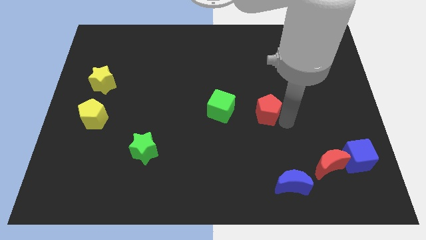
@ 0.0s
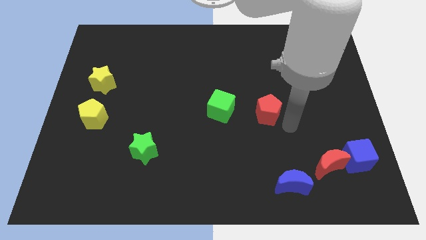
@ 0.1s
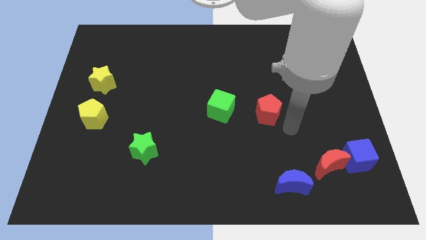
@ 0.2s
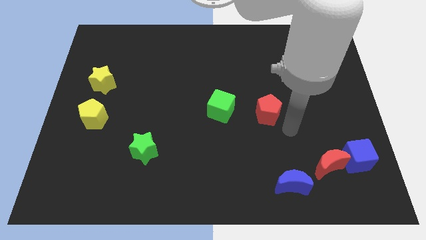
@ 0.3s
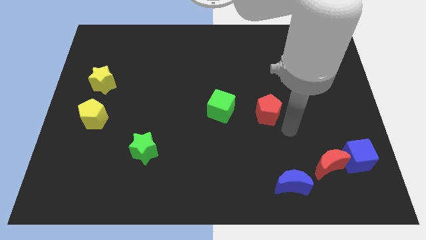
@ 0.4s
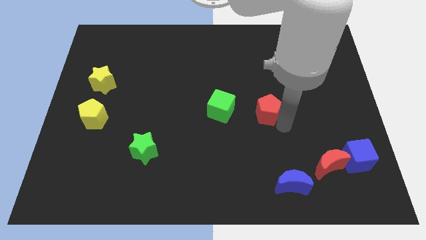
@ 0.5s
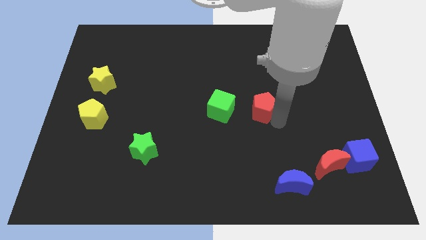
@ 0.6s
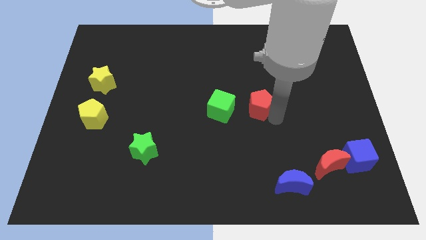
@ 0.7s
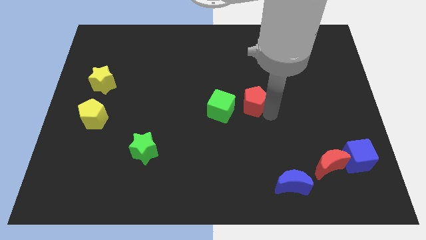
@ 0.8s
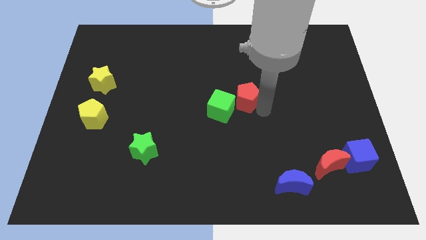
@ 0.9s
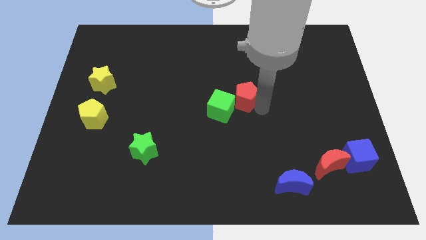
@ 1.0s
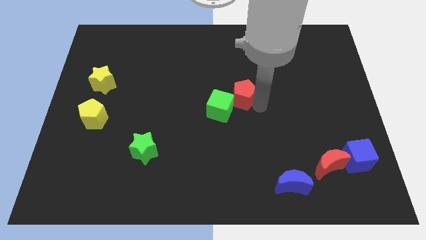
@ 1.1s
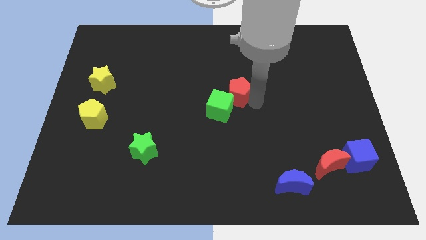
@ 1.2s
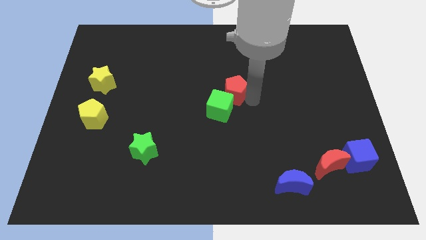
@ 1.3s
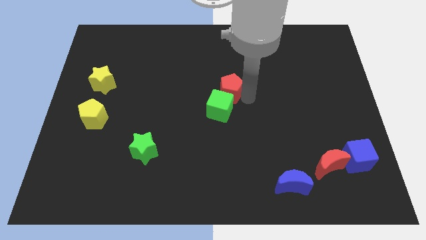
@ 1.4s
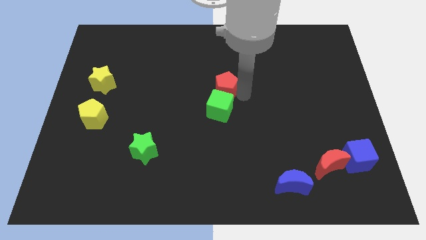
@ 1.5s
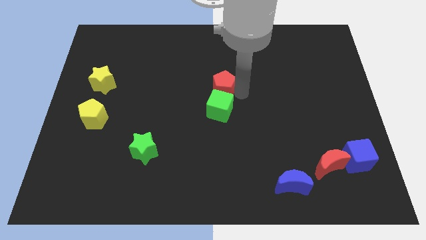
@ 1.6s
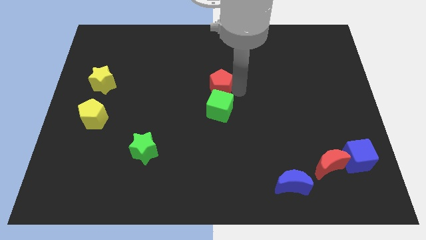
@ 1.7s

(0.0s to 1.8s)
move the red pentagon at the top side of the green cube

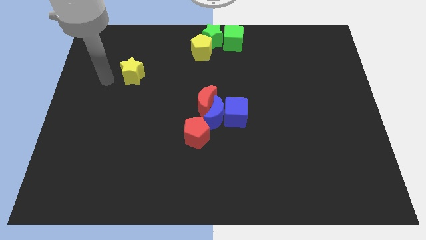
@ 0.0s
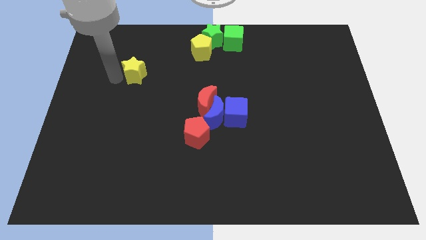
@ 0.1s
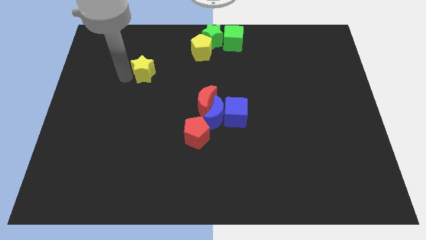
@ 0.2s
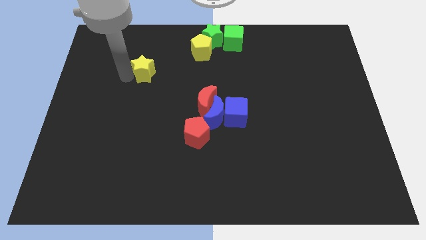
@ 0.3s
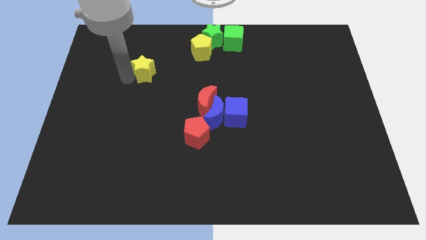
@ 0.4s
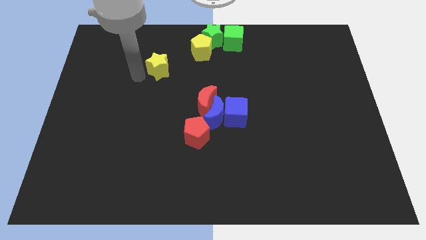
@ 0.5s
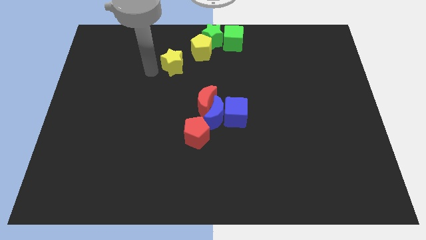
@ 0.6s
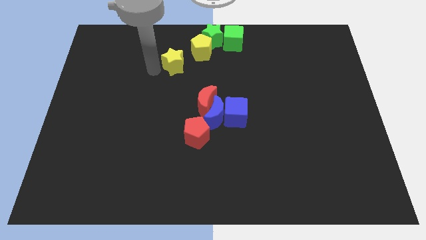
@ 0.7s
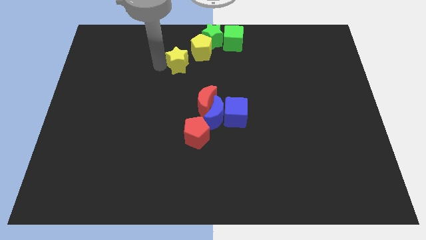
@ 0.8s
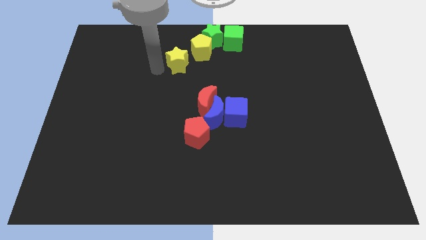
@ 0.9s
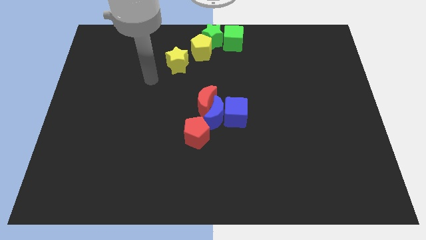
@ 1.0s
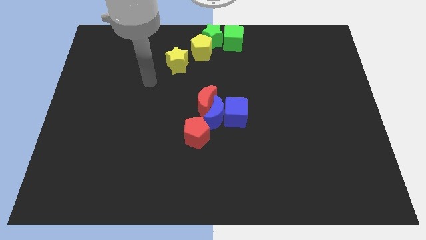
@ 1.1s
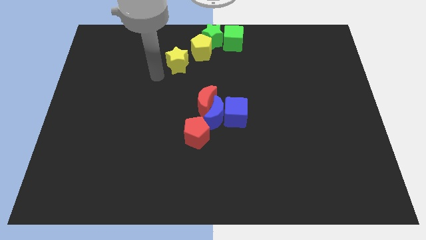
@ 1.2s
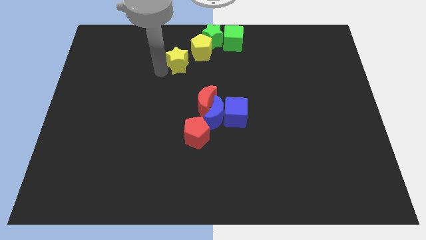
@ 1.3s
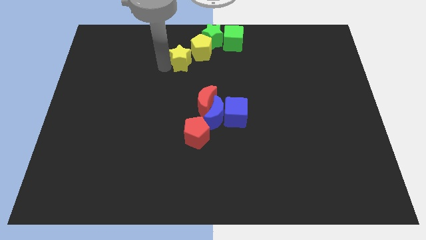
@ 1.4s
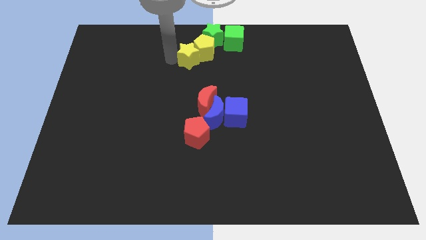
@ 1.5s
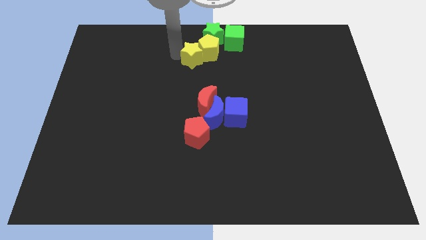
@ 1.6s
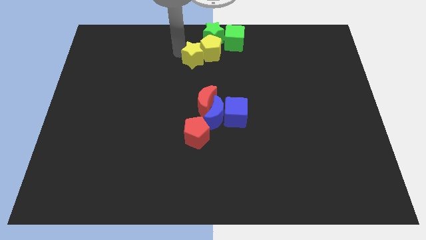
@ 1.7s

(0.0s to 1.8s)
move the yellow star into the yellow pentagon

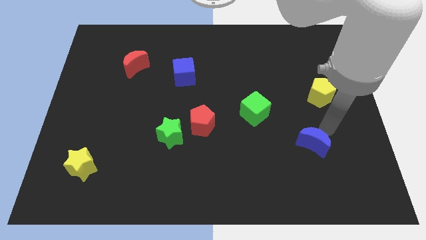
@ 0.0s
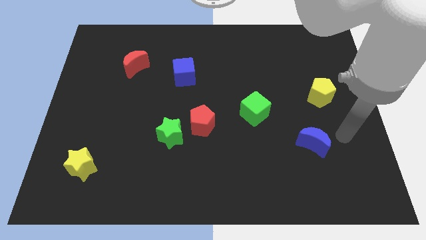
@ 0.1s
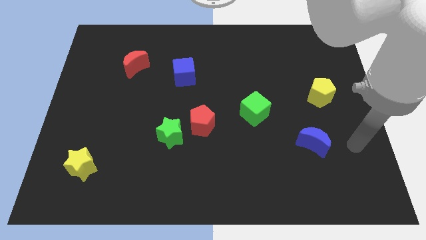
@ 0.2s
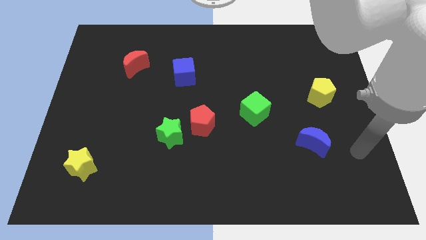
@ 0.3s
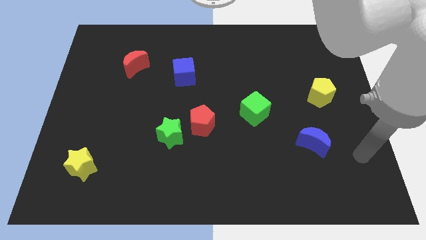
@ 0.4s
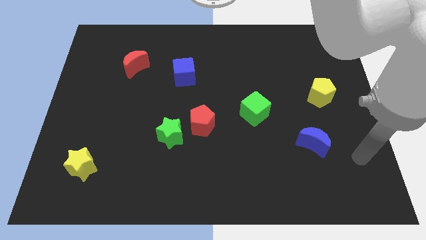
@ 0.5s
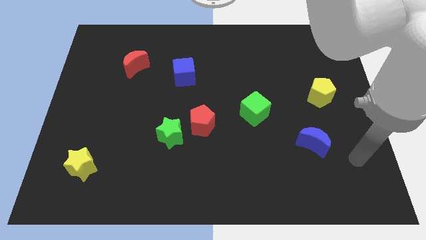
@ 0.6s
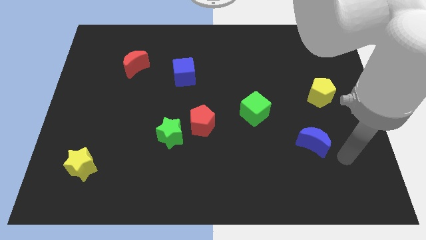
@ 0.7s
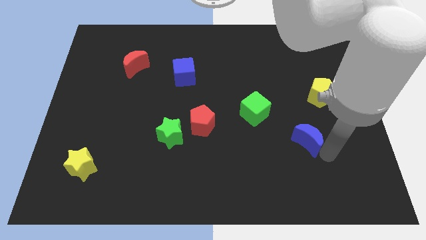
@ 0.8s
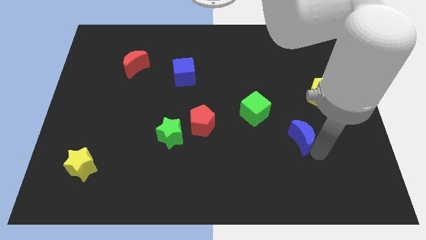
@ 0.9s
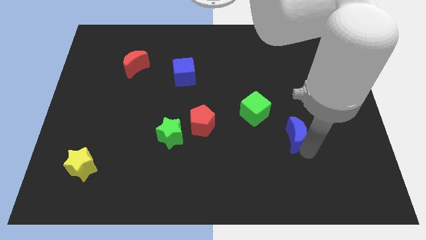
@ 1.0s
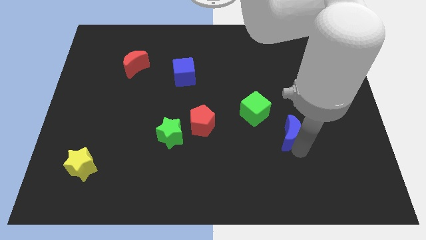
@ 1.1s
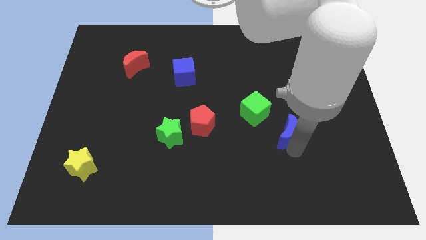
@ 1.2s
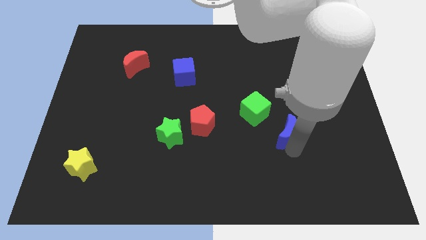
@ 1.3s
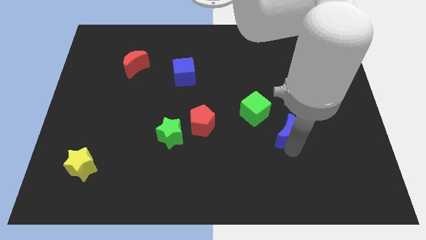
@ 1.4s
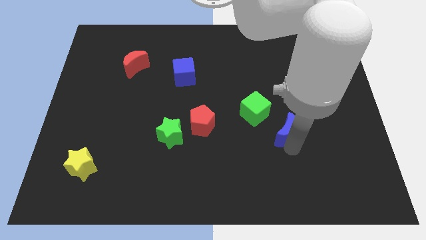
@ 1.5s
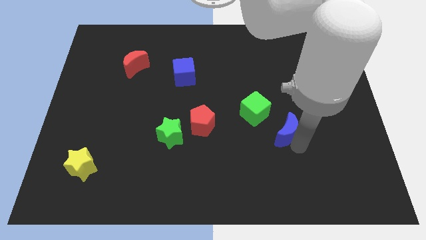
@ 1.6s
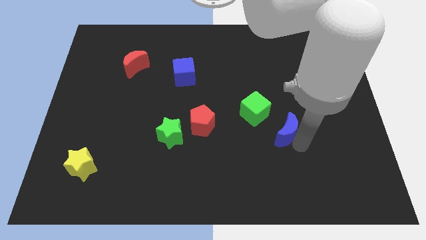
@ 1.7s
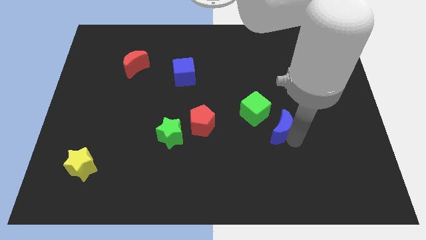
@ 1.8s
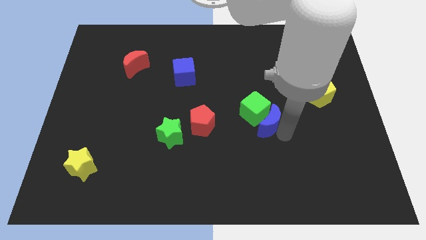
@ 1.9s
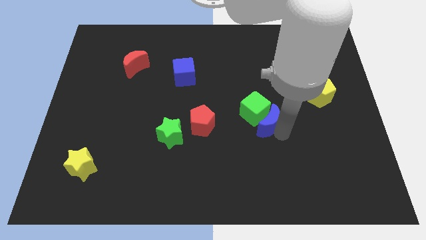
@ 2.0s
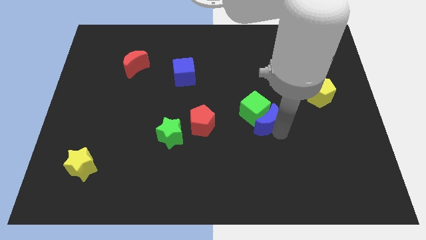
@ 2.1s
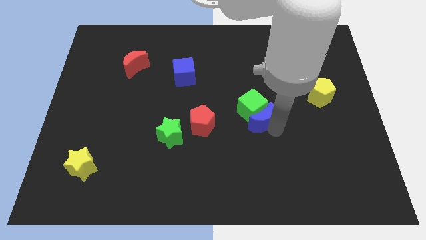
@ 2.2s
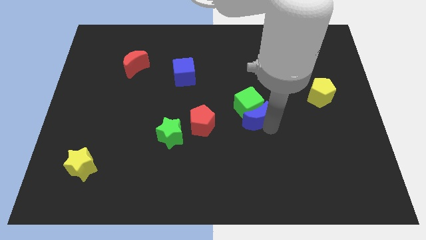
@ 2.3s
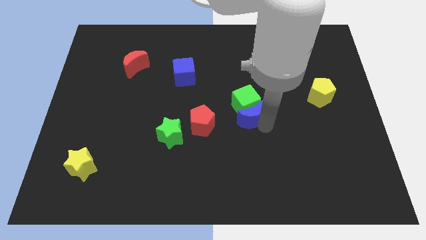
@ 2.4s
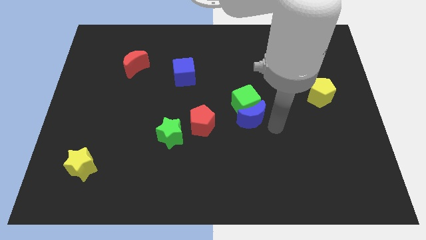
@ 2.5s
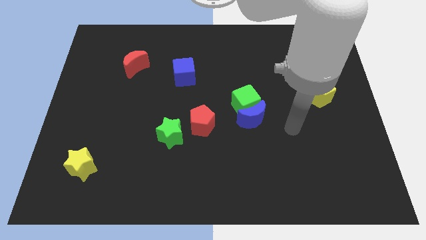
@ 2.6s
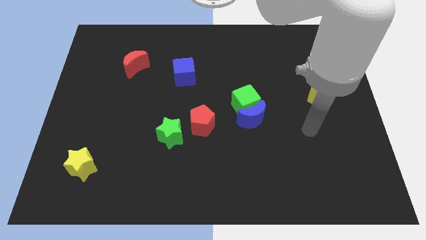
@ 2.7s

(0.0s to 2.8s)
push blue crescent to the bottom of green cube

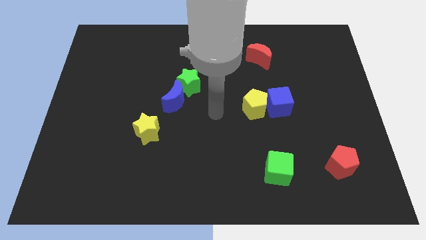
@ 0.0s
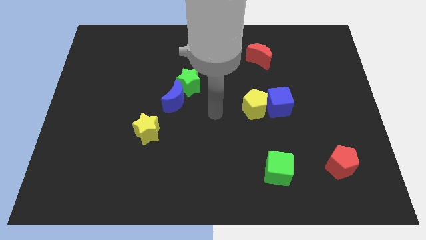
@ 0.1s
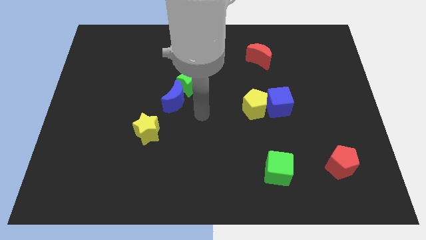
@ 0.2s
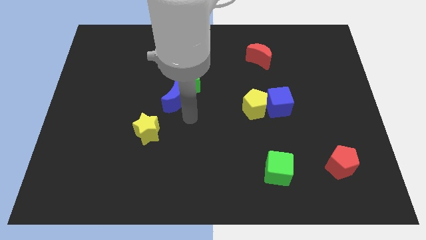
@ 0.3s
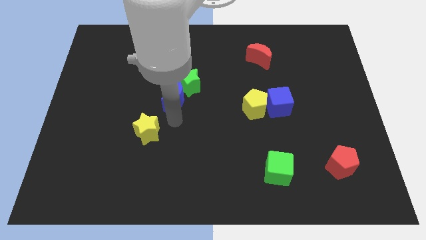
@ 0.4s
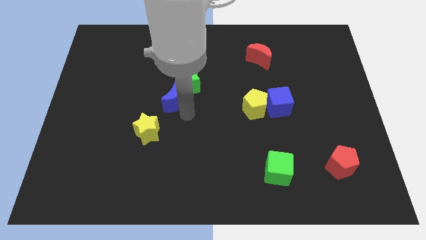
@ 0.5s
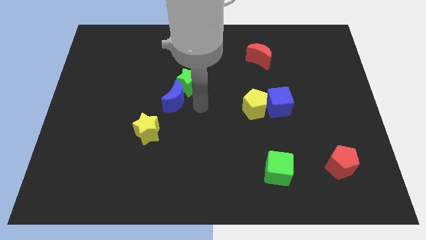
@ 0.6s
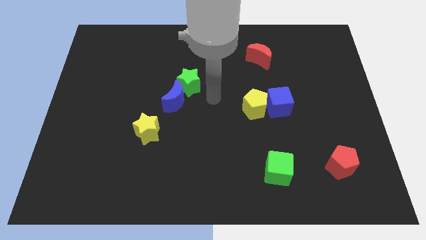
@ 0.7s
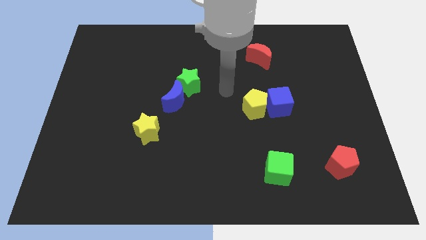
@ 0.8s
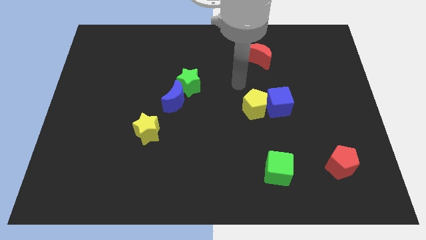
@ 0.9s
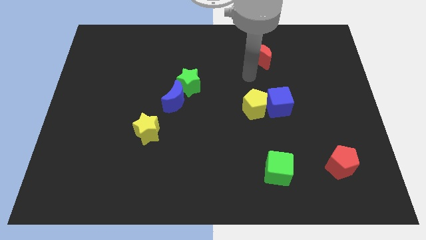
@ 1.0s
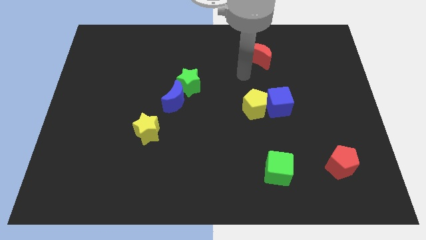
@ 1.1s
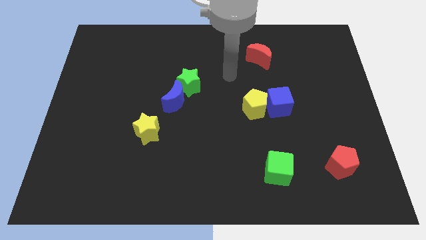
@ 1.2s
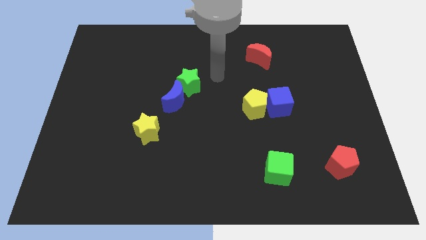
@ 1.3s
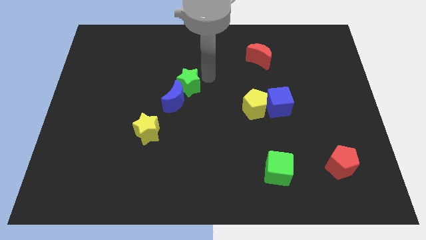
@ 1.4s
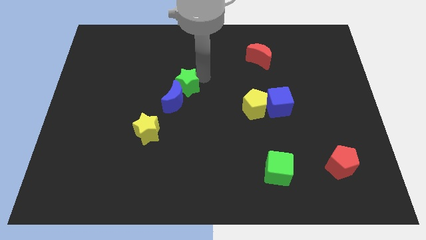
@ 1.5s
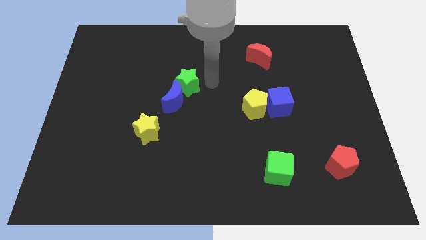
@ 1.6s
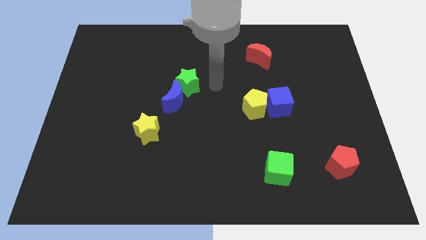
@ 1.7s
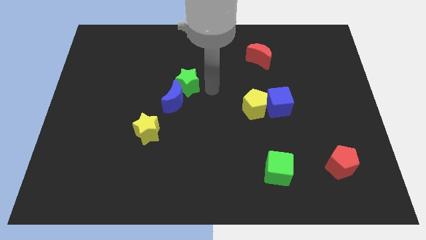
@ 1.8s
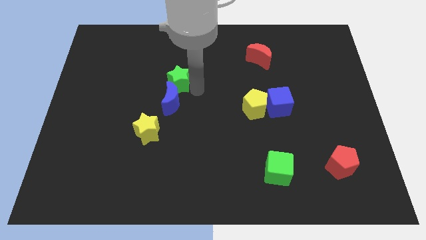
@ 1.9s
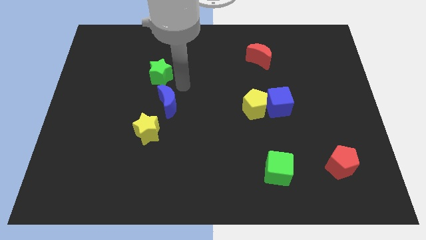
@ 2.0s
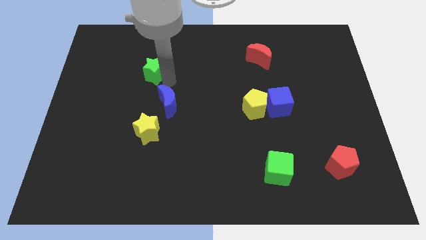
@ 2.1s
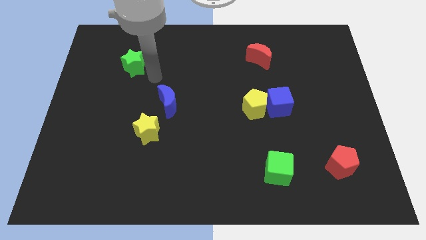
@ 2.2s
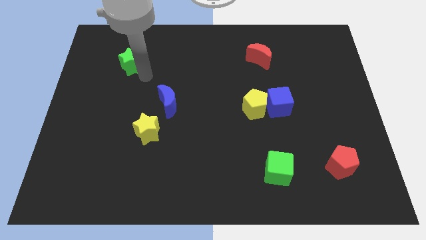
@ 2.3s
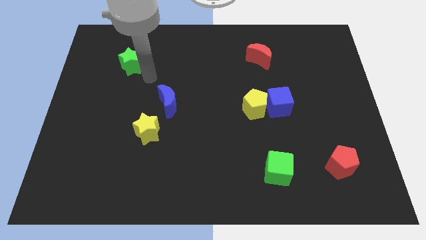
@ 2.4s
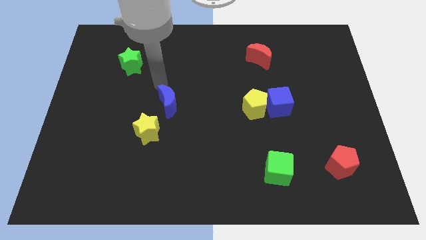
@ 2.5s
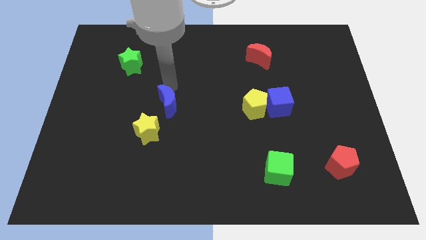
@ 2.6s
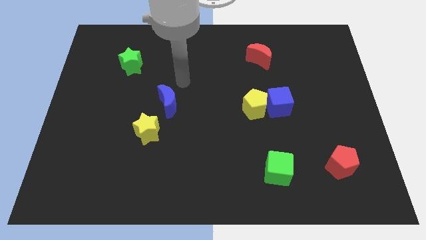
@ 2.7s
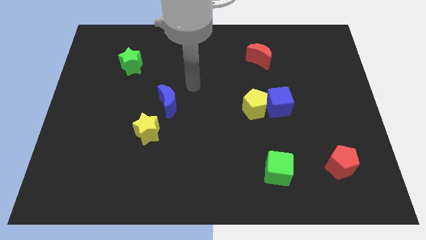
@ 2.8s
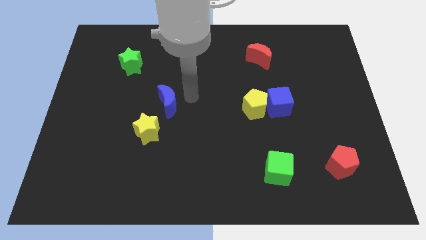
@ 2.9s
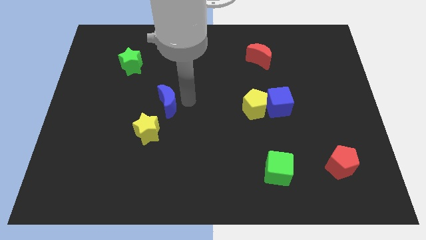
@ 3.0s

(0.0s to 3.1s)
push the green star away from the blue crescent
